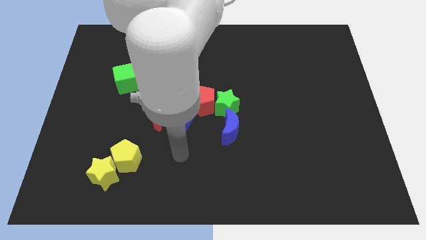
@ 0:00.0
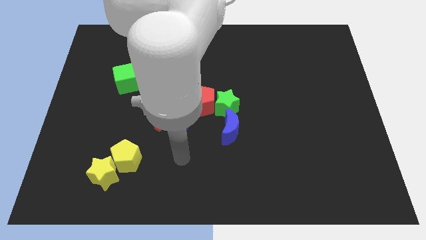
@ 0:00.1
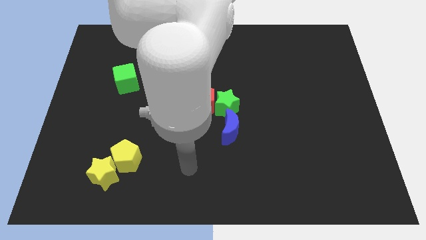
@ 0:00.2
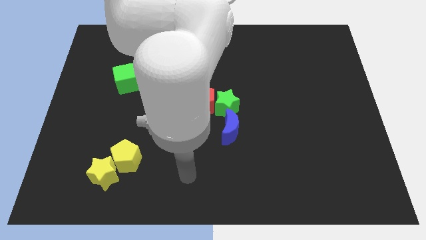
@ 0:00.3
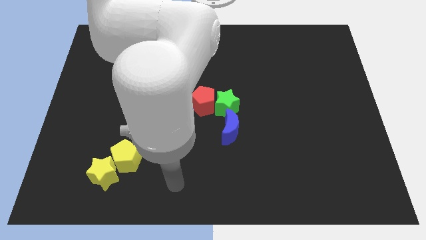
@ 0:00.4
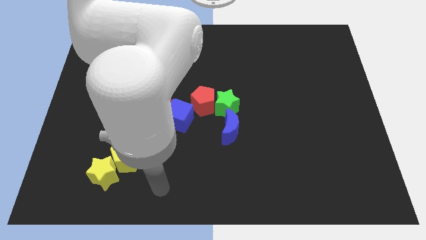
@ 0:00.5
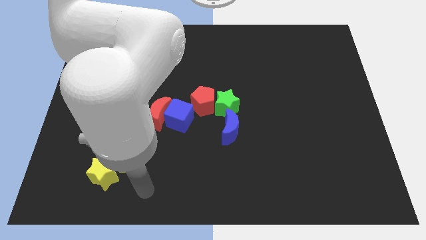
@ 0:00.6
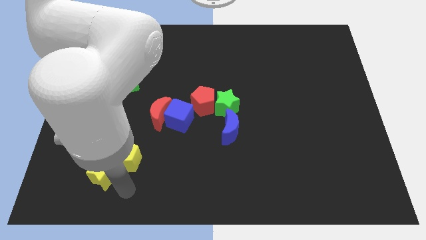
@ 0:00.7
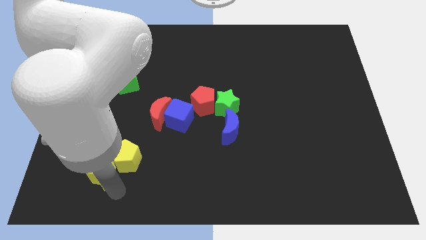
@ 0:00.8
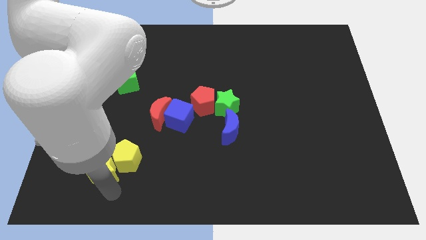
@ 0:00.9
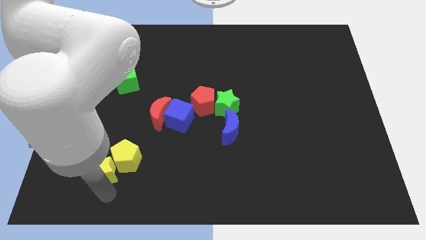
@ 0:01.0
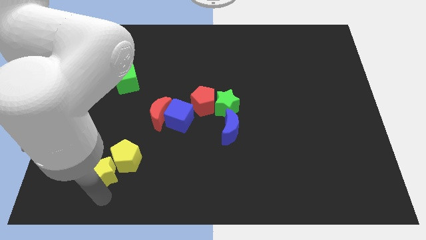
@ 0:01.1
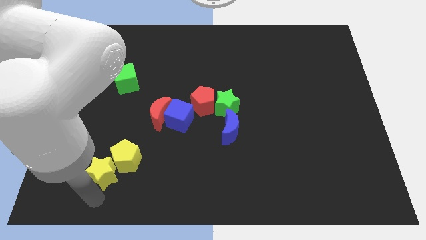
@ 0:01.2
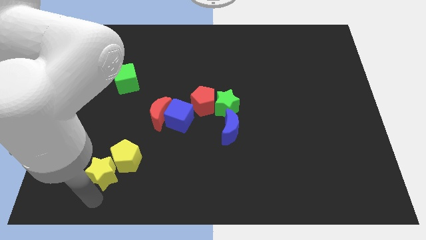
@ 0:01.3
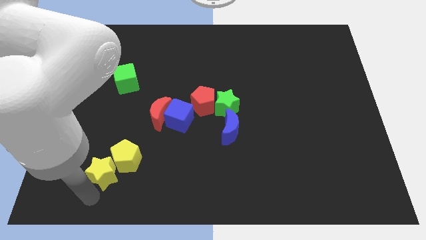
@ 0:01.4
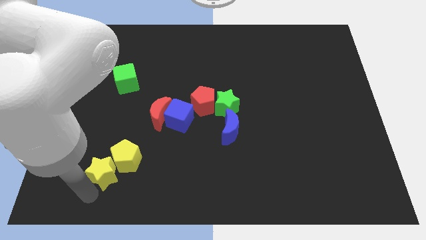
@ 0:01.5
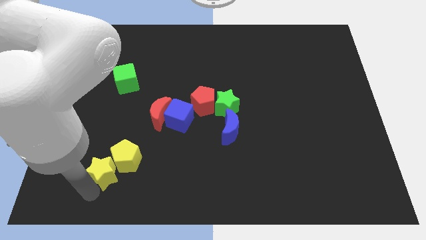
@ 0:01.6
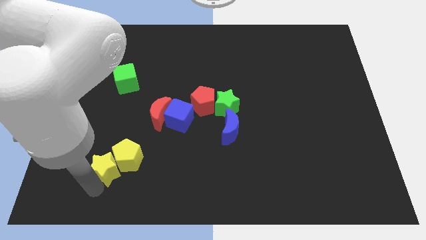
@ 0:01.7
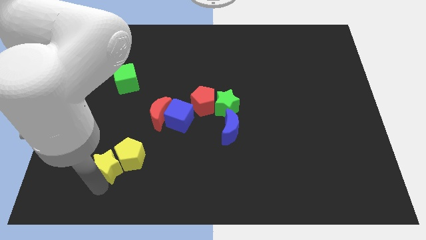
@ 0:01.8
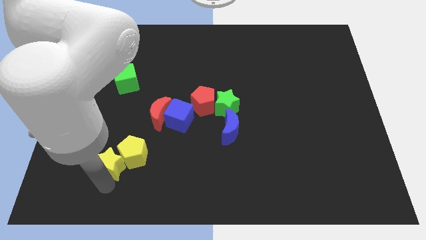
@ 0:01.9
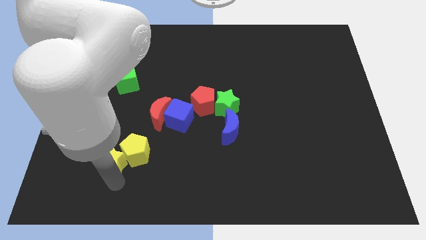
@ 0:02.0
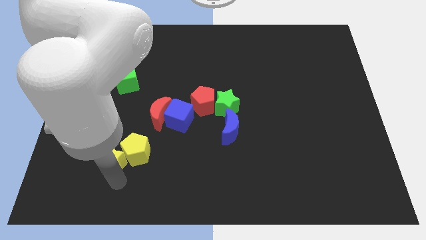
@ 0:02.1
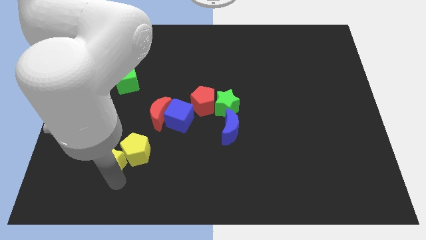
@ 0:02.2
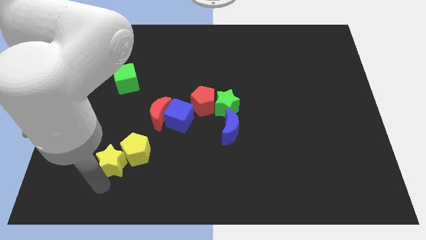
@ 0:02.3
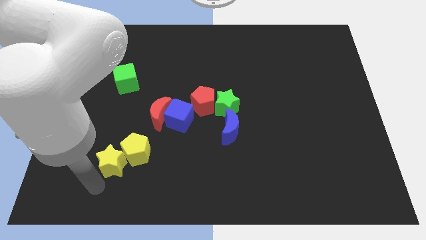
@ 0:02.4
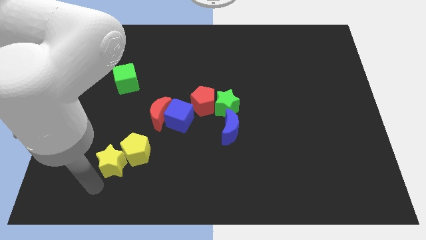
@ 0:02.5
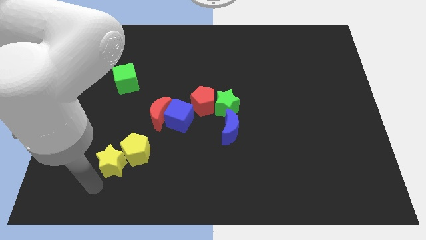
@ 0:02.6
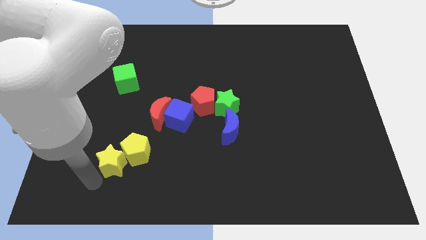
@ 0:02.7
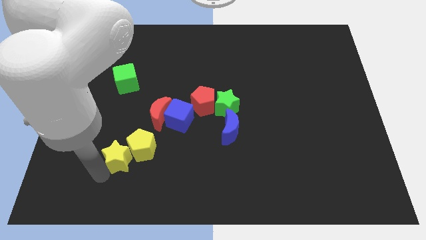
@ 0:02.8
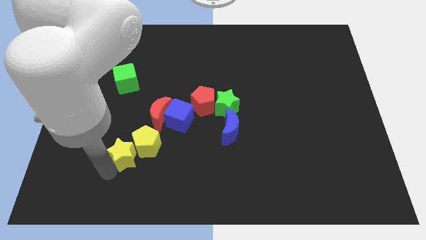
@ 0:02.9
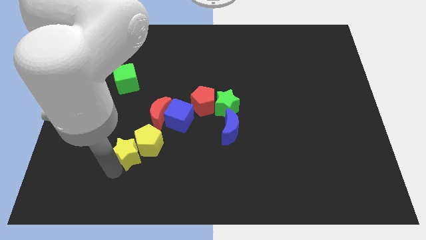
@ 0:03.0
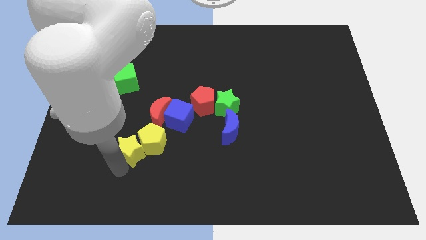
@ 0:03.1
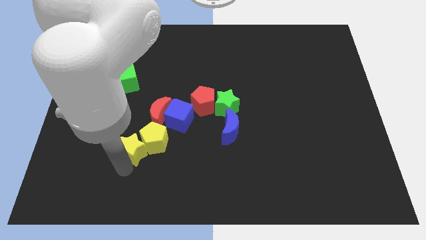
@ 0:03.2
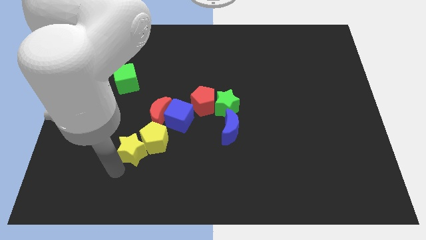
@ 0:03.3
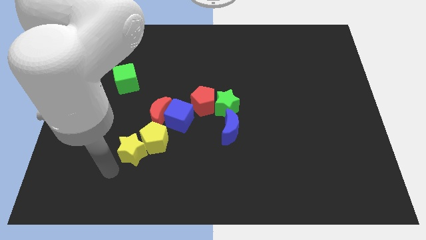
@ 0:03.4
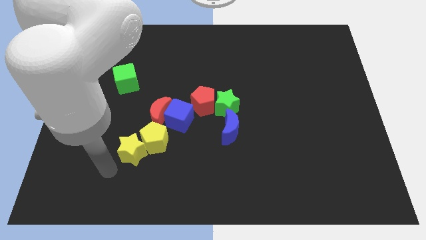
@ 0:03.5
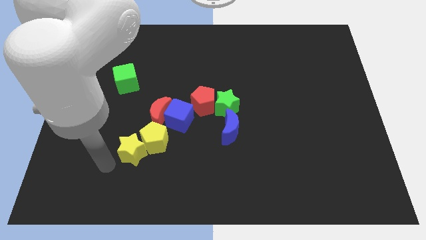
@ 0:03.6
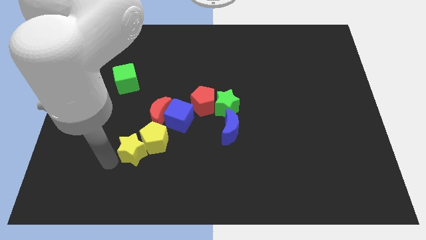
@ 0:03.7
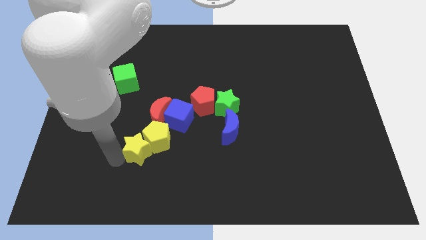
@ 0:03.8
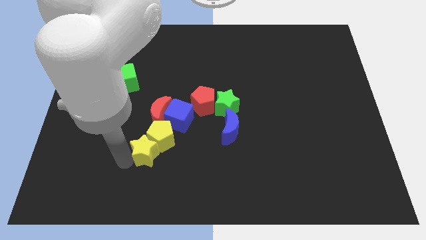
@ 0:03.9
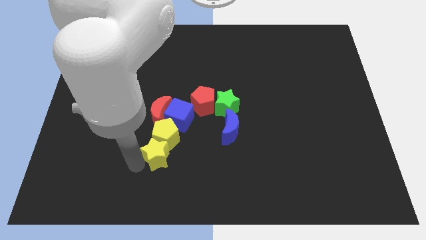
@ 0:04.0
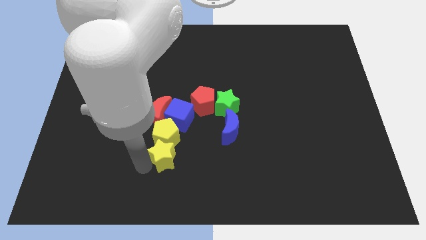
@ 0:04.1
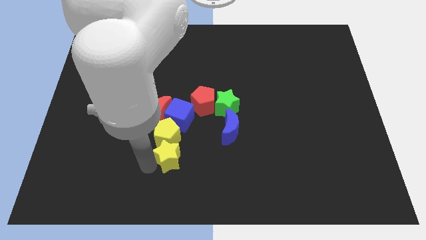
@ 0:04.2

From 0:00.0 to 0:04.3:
move the yellow blocks to the bottom of the red crescent

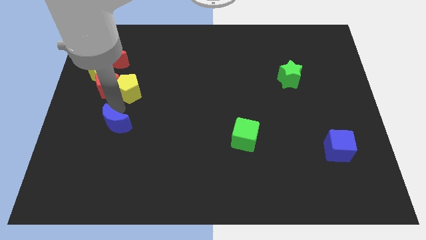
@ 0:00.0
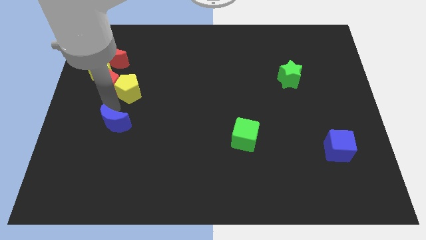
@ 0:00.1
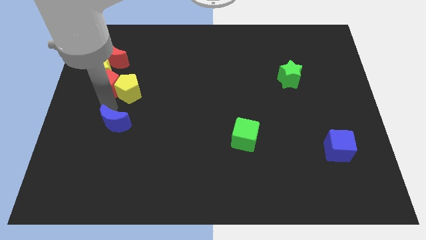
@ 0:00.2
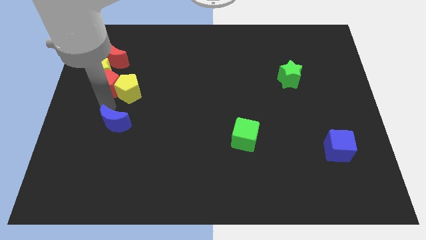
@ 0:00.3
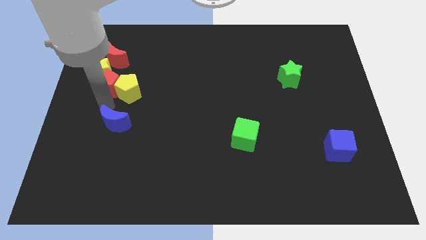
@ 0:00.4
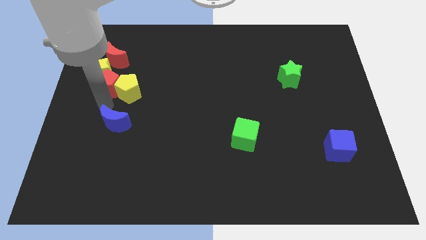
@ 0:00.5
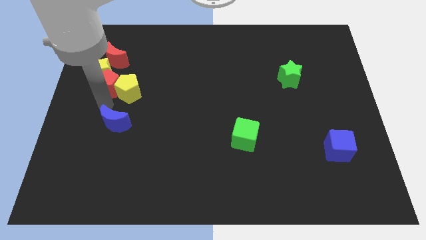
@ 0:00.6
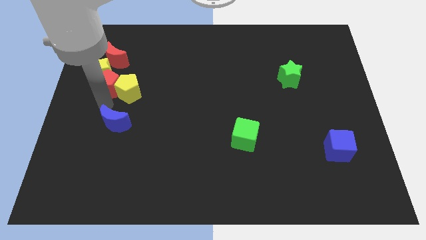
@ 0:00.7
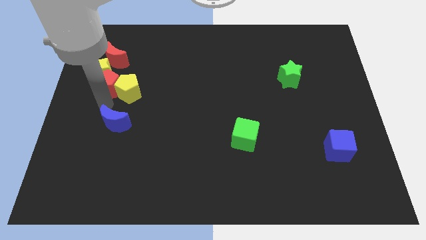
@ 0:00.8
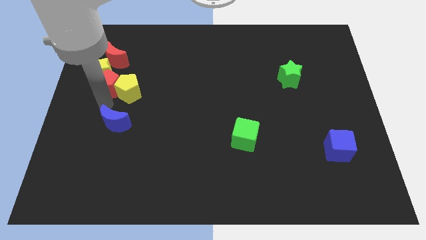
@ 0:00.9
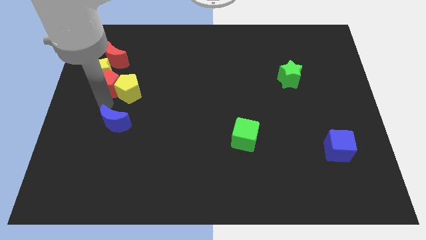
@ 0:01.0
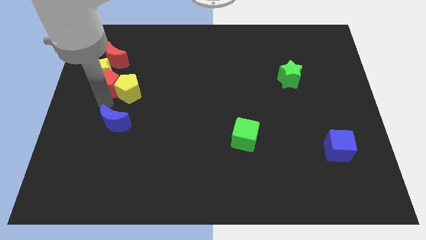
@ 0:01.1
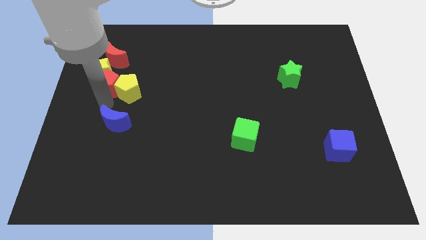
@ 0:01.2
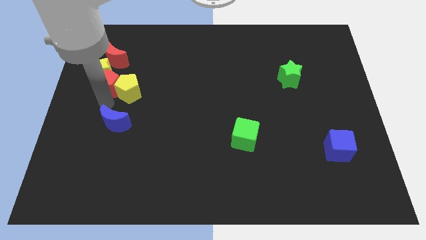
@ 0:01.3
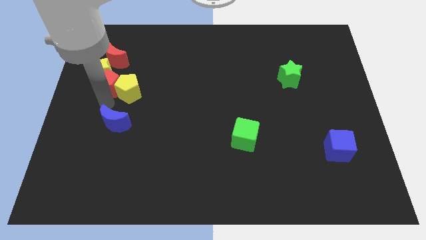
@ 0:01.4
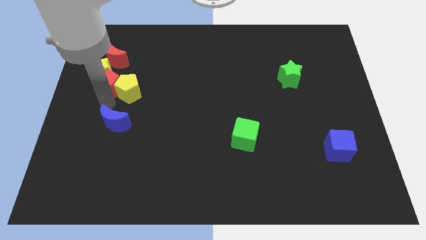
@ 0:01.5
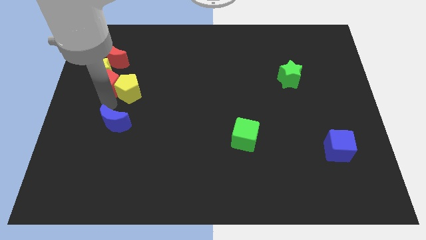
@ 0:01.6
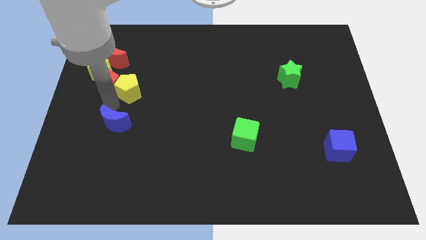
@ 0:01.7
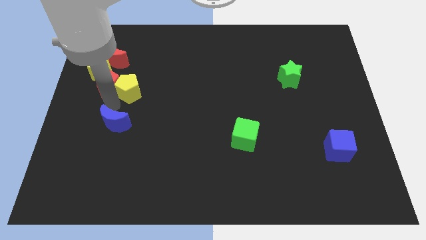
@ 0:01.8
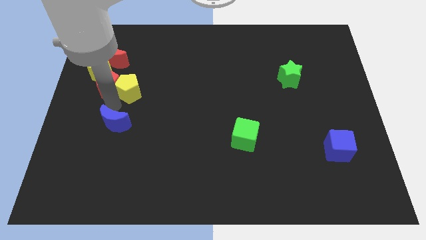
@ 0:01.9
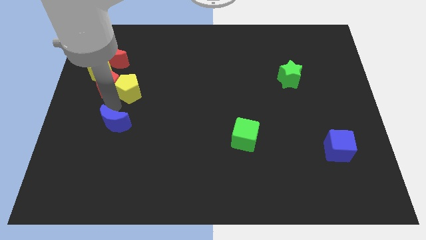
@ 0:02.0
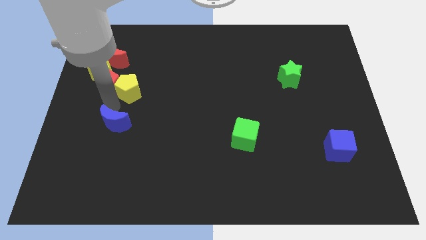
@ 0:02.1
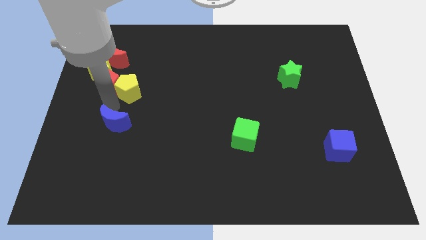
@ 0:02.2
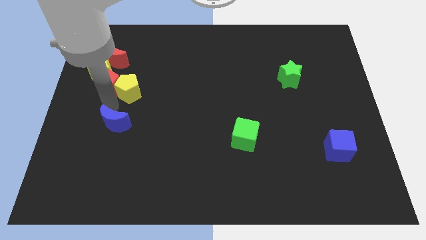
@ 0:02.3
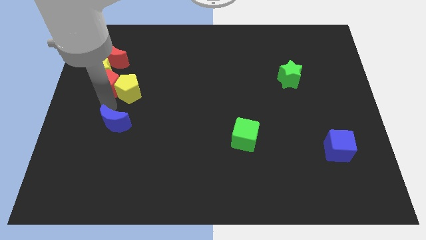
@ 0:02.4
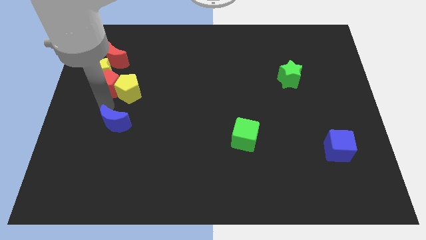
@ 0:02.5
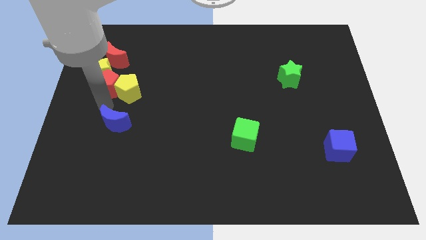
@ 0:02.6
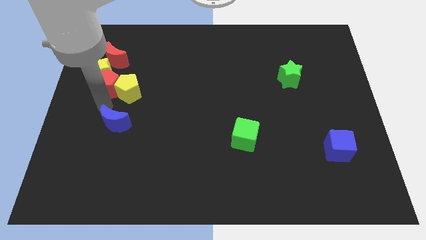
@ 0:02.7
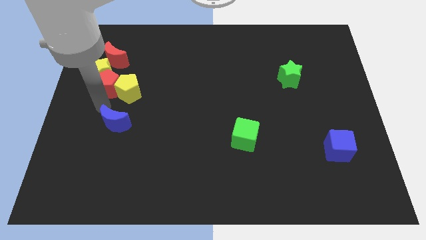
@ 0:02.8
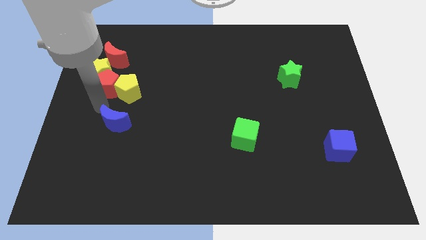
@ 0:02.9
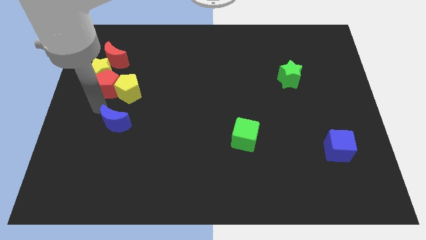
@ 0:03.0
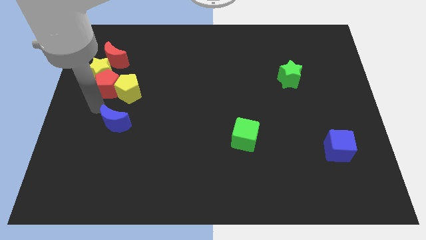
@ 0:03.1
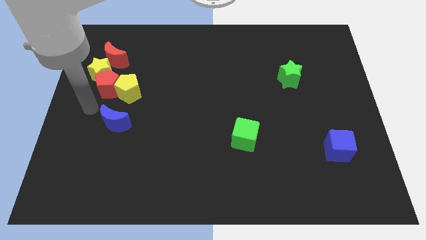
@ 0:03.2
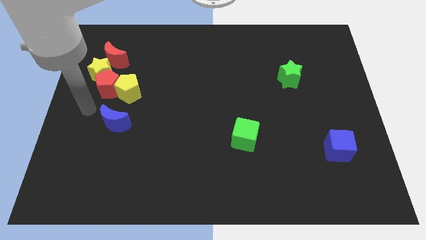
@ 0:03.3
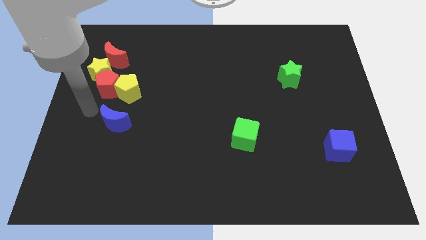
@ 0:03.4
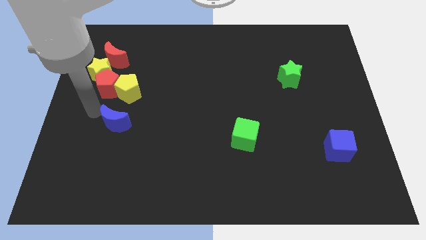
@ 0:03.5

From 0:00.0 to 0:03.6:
point the arm to the left of the blue moon

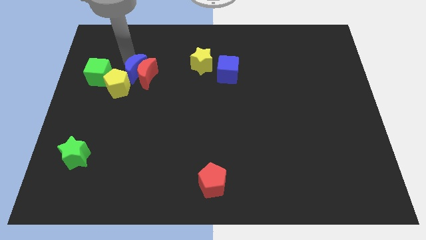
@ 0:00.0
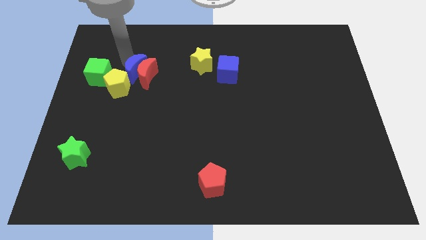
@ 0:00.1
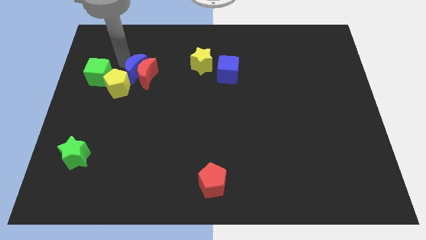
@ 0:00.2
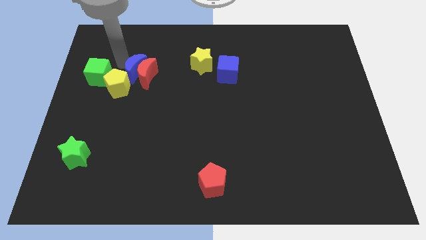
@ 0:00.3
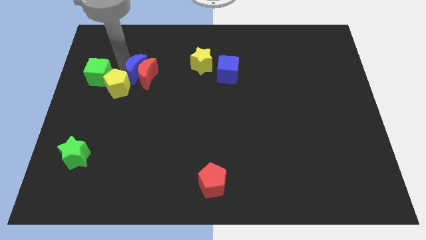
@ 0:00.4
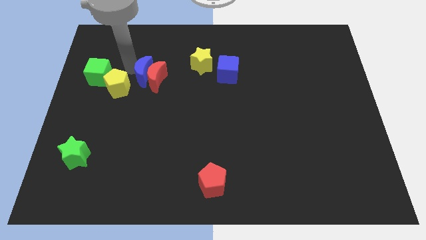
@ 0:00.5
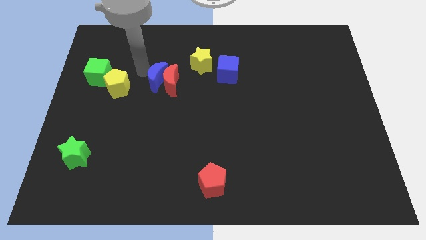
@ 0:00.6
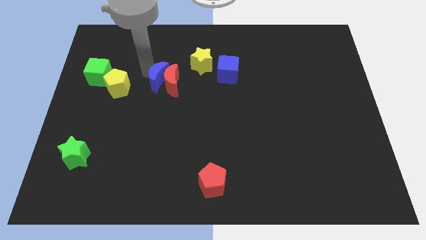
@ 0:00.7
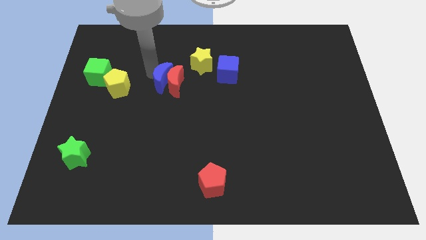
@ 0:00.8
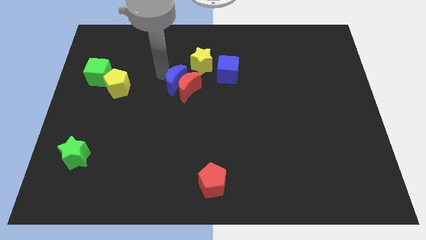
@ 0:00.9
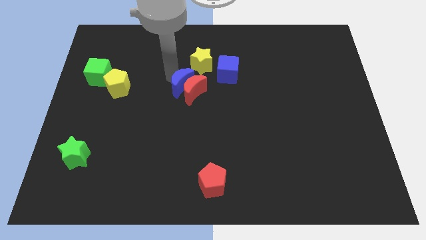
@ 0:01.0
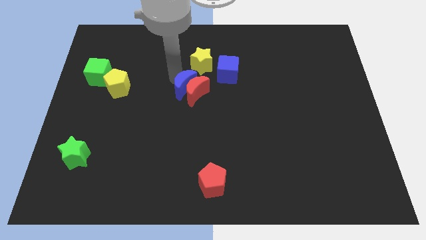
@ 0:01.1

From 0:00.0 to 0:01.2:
move red moon and blue moon below yellow star
